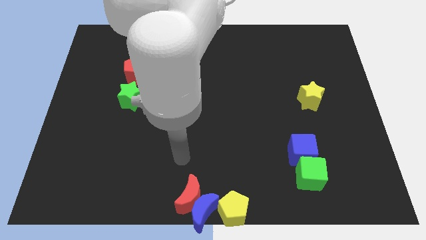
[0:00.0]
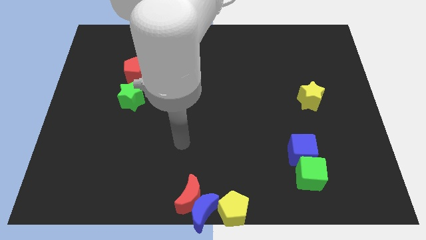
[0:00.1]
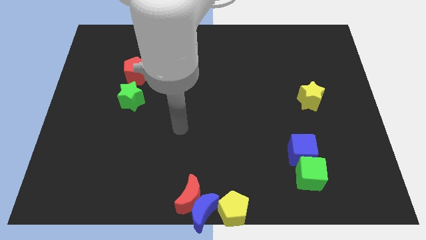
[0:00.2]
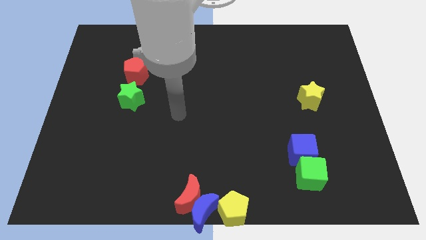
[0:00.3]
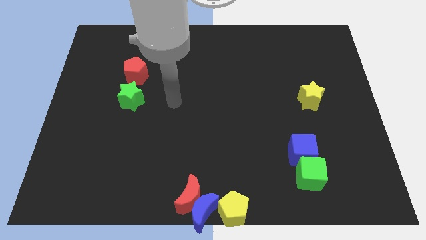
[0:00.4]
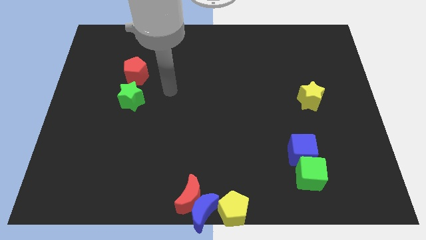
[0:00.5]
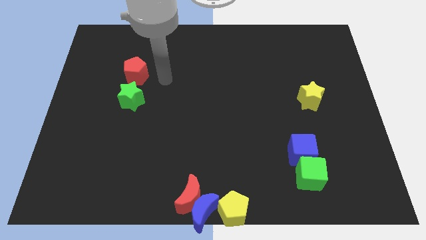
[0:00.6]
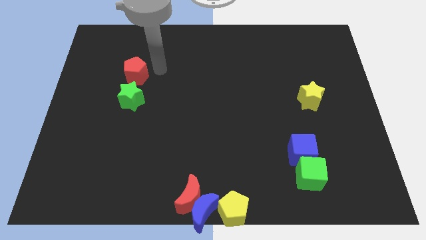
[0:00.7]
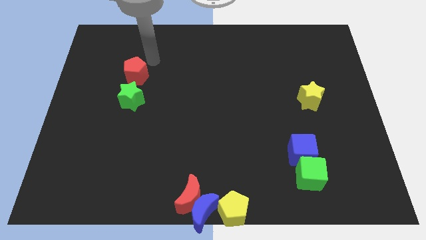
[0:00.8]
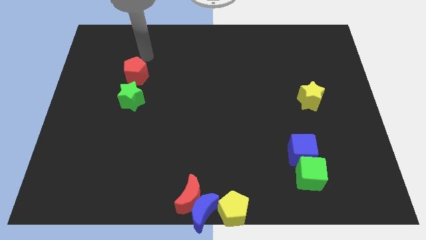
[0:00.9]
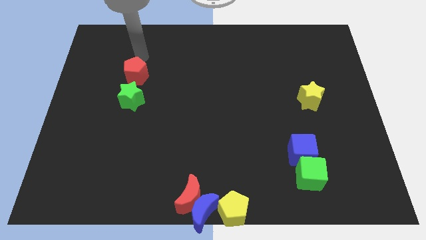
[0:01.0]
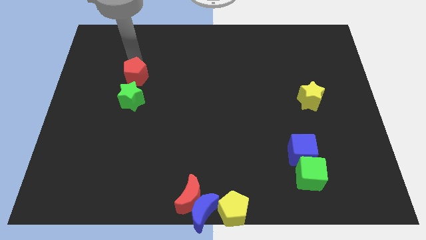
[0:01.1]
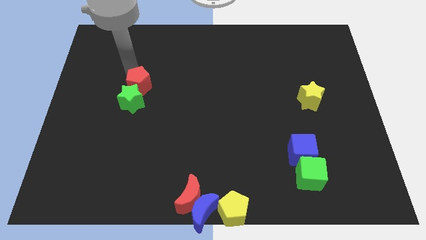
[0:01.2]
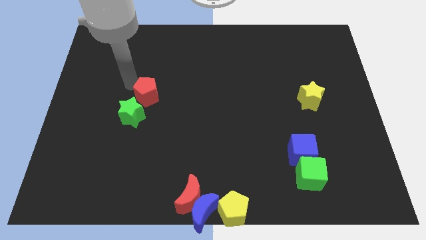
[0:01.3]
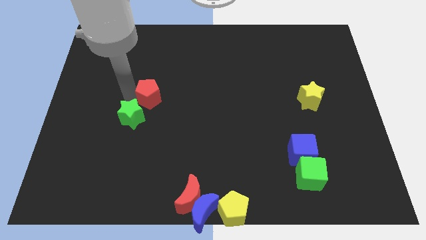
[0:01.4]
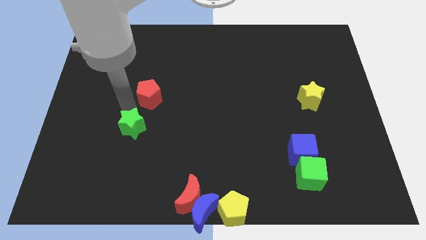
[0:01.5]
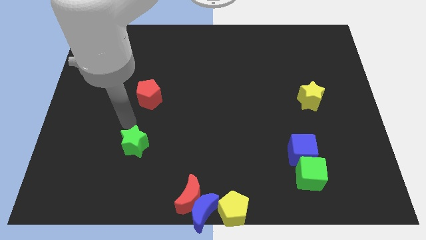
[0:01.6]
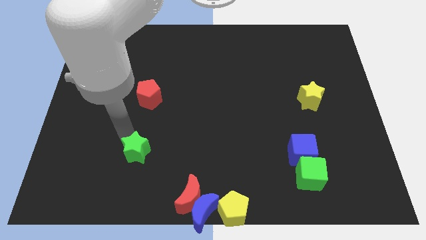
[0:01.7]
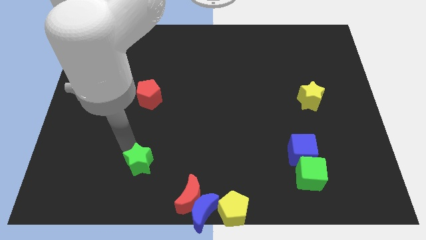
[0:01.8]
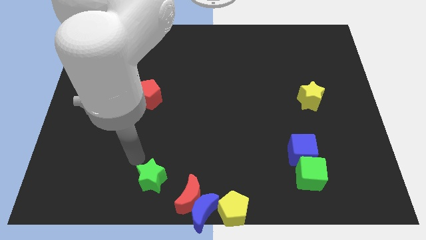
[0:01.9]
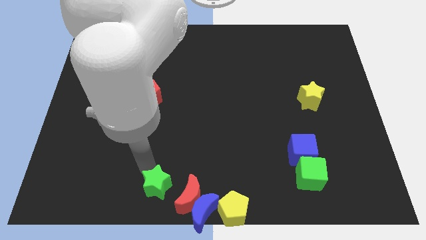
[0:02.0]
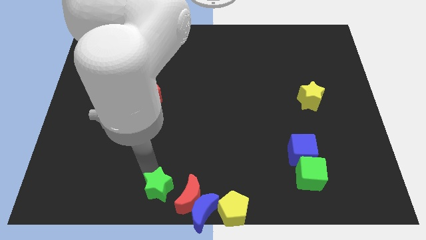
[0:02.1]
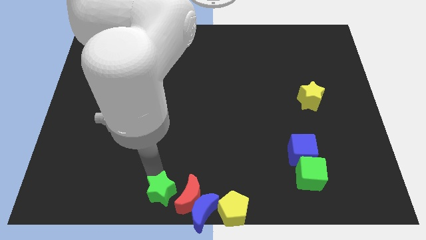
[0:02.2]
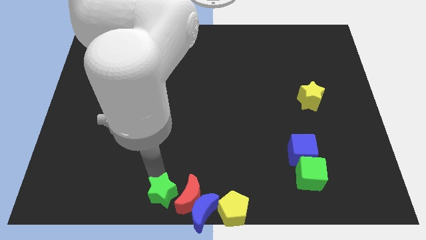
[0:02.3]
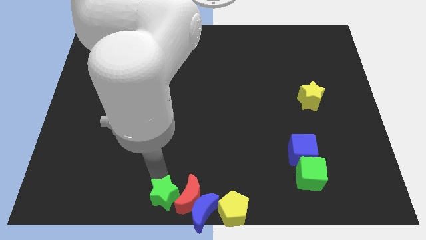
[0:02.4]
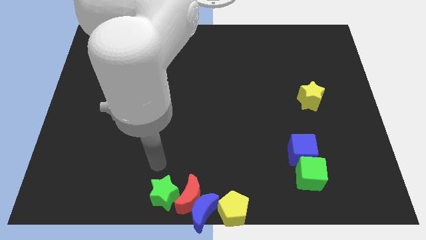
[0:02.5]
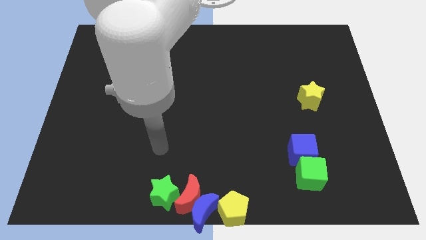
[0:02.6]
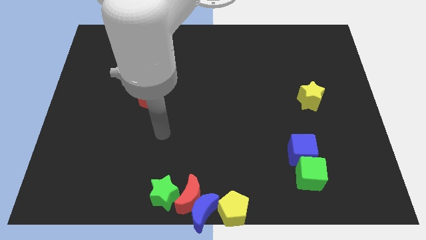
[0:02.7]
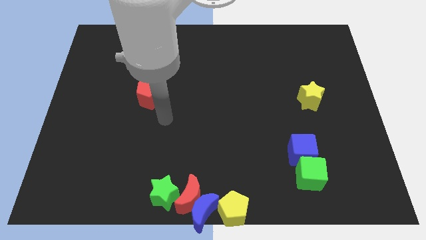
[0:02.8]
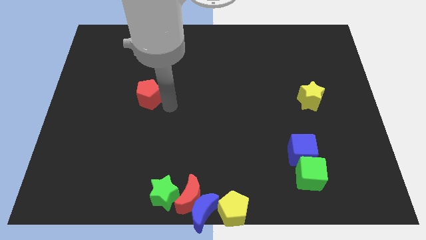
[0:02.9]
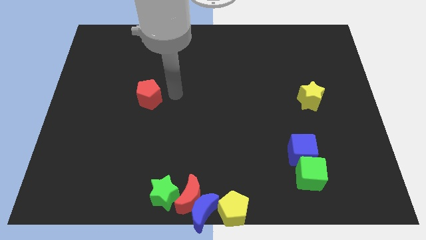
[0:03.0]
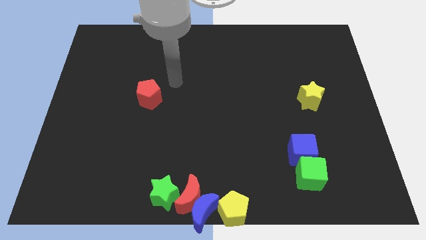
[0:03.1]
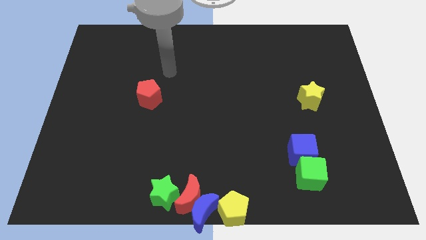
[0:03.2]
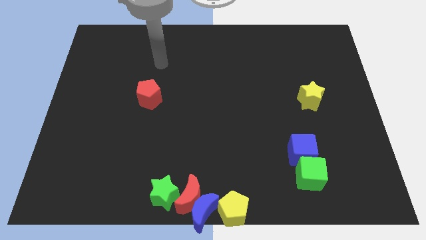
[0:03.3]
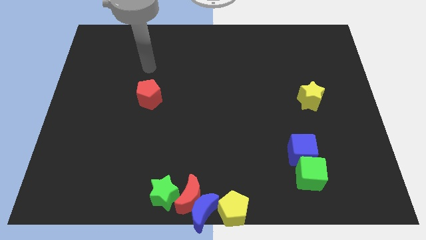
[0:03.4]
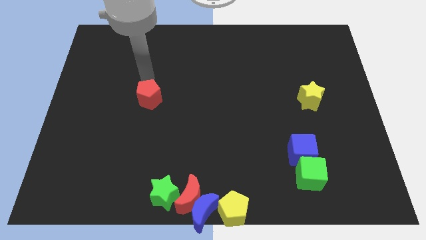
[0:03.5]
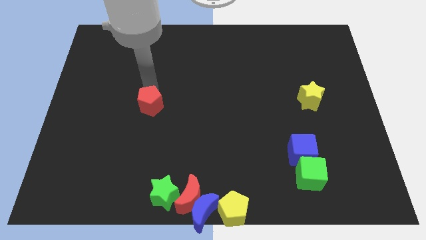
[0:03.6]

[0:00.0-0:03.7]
separate the red pentagon and the green star

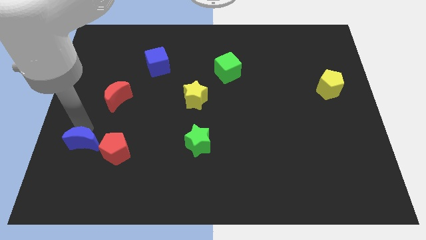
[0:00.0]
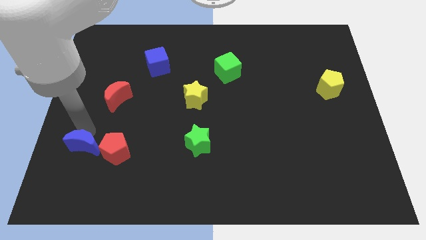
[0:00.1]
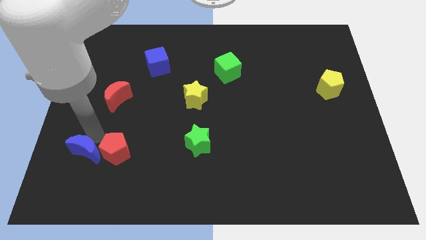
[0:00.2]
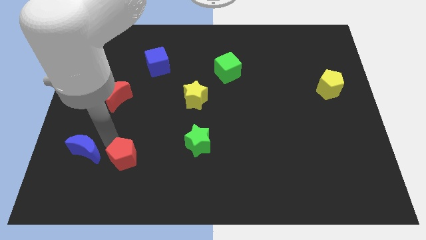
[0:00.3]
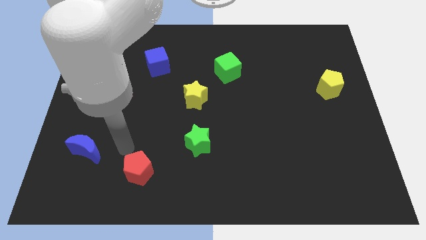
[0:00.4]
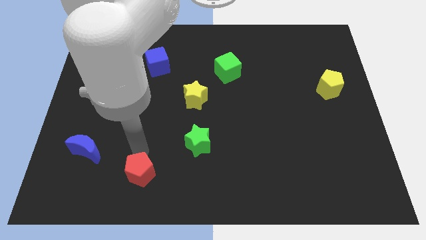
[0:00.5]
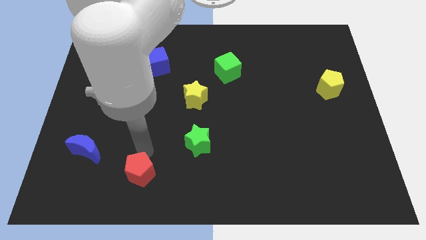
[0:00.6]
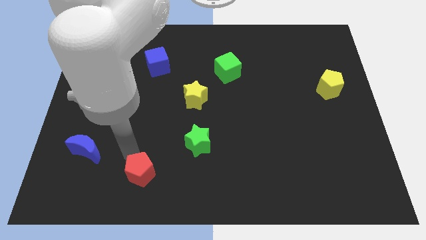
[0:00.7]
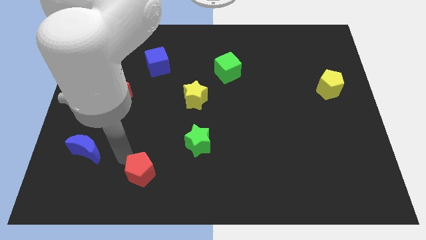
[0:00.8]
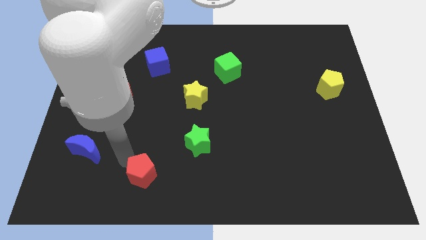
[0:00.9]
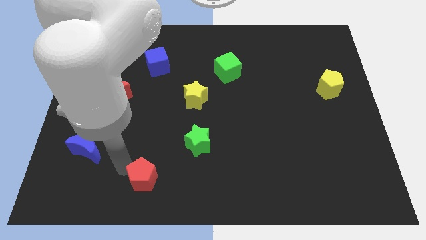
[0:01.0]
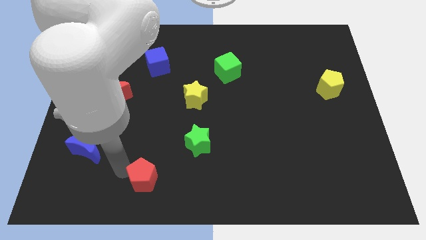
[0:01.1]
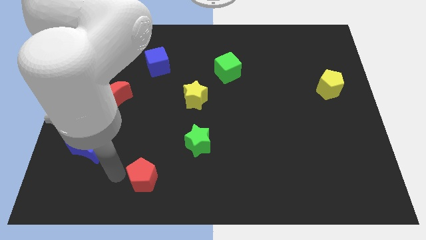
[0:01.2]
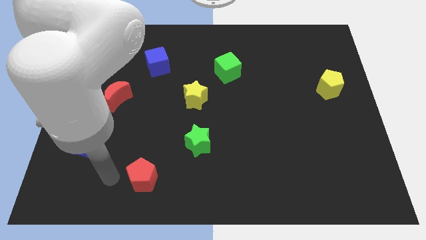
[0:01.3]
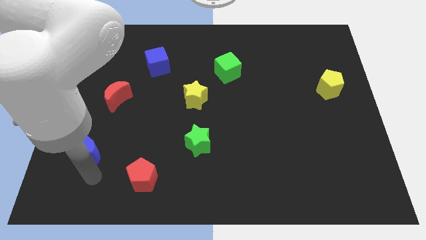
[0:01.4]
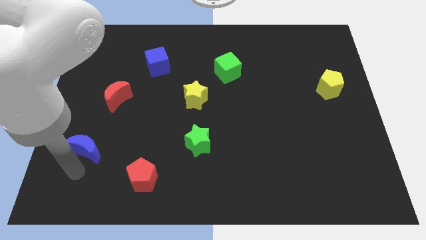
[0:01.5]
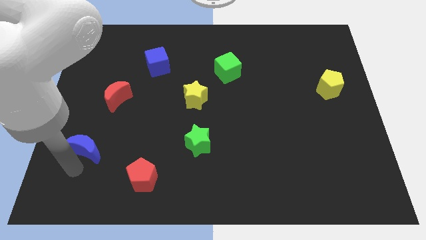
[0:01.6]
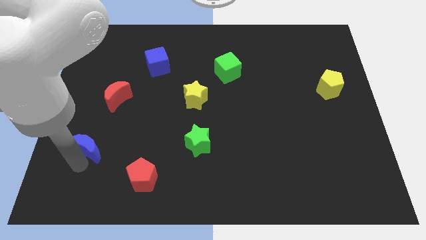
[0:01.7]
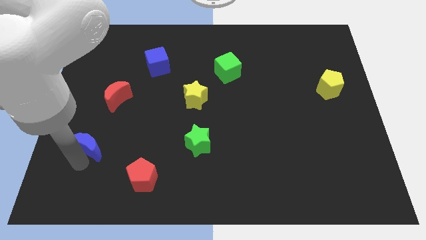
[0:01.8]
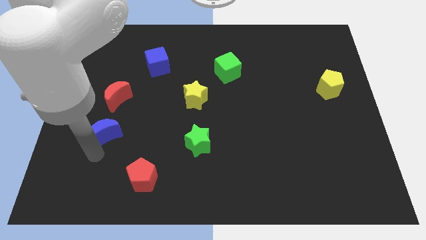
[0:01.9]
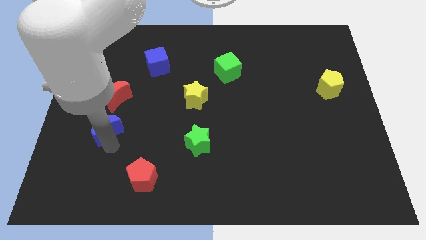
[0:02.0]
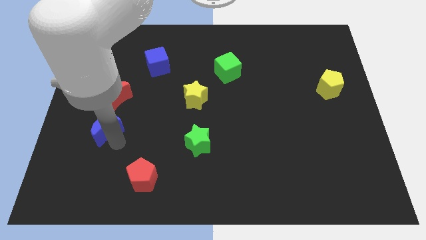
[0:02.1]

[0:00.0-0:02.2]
separate the blue crescent and red pentagon

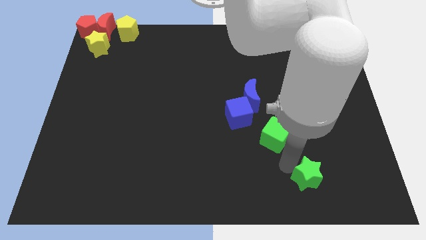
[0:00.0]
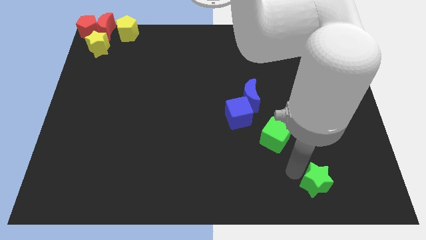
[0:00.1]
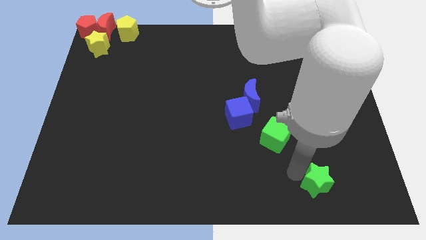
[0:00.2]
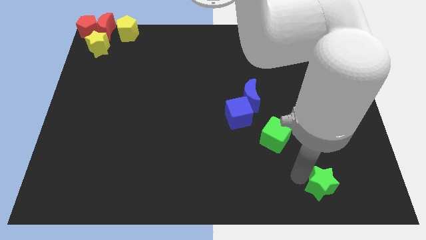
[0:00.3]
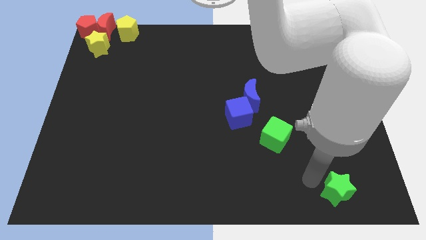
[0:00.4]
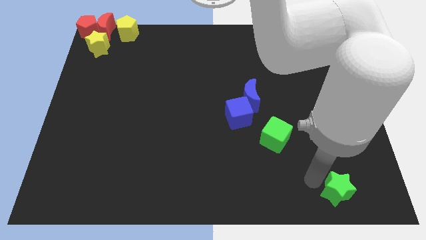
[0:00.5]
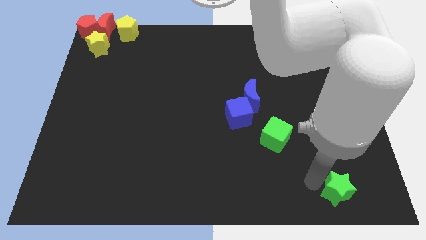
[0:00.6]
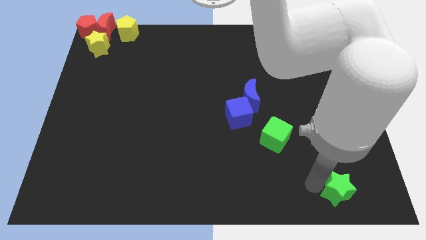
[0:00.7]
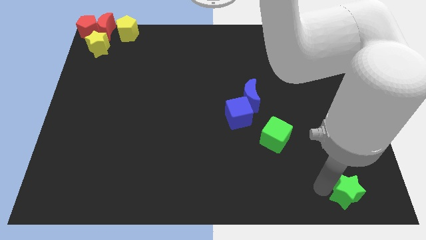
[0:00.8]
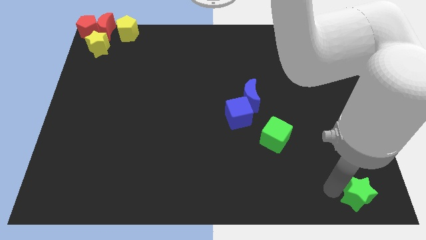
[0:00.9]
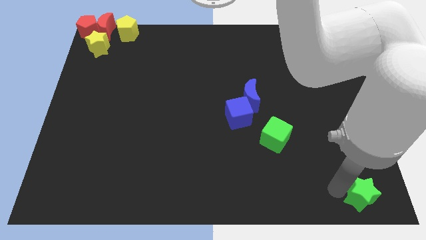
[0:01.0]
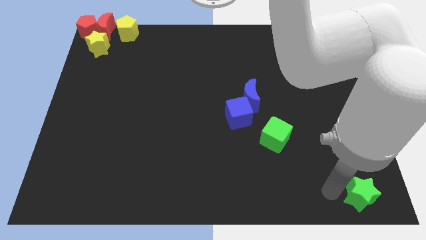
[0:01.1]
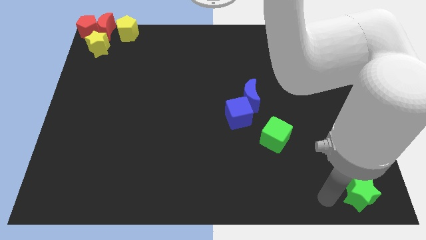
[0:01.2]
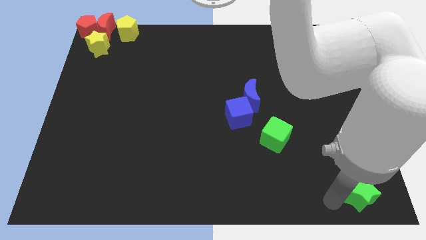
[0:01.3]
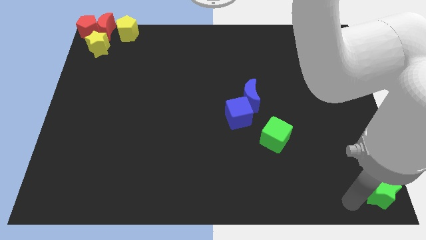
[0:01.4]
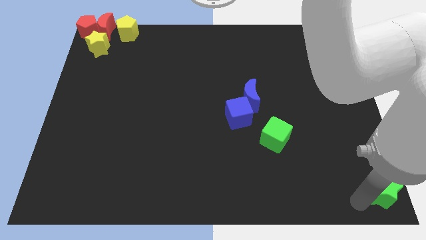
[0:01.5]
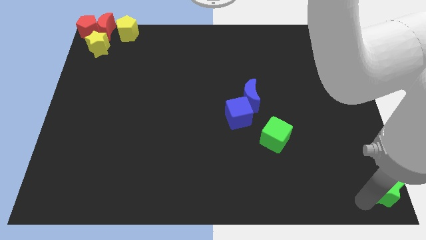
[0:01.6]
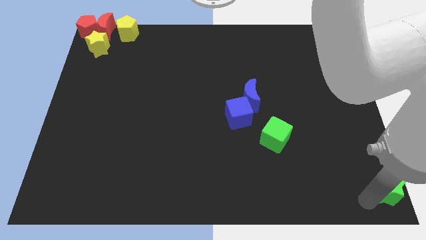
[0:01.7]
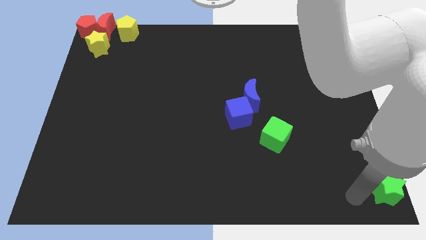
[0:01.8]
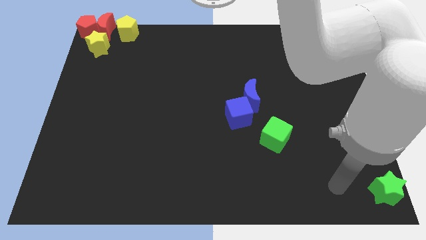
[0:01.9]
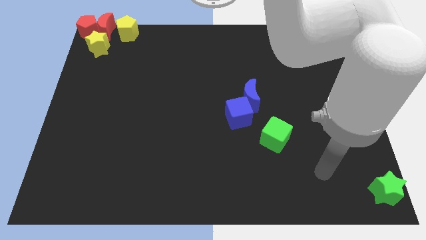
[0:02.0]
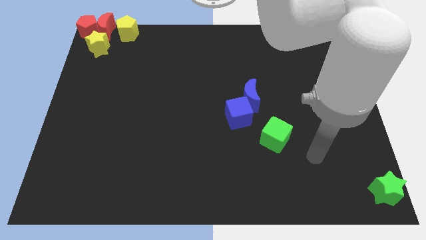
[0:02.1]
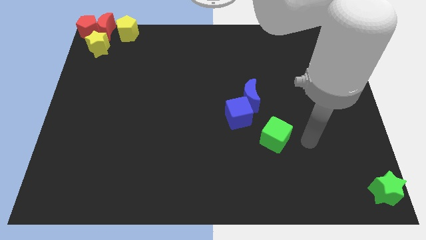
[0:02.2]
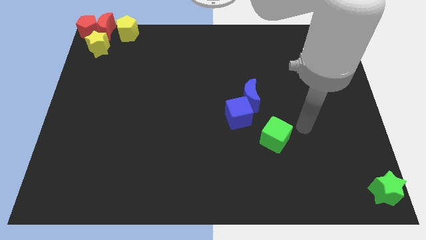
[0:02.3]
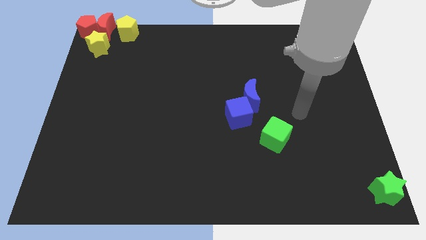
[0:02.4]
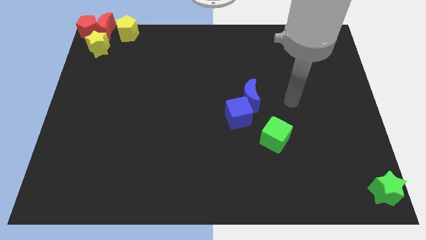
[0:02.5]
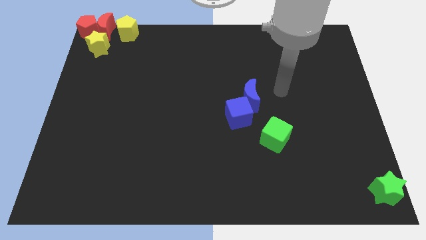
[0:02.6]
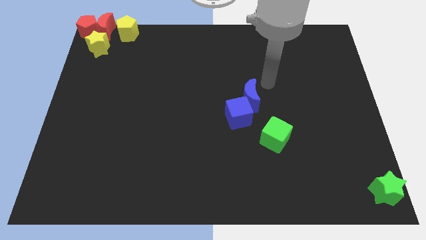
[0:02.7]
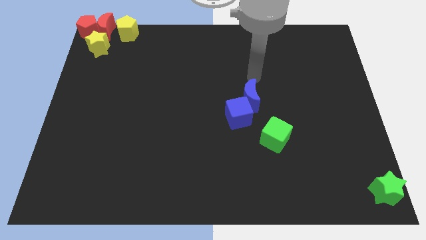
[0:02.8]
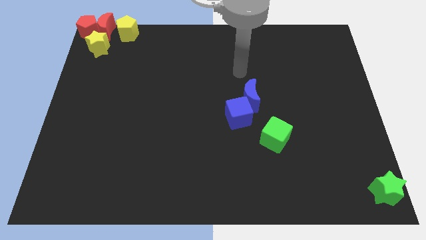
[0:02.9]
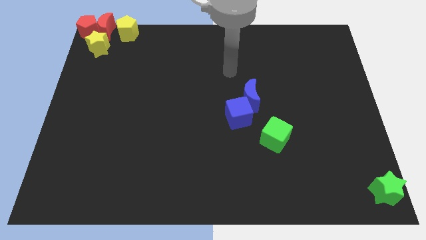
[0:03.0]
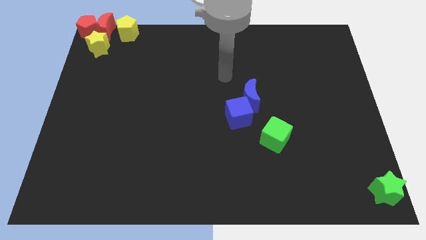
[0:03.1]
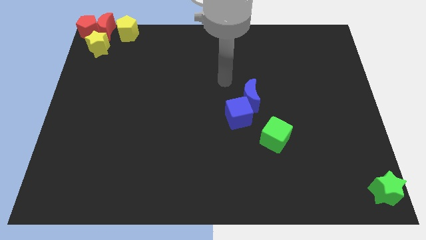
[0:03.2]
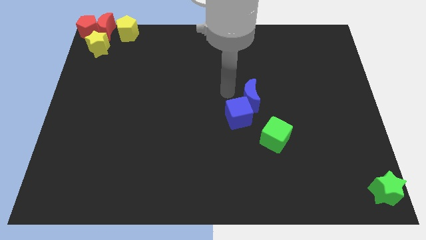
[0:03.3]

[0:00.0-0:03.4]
put the green star at the bottom right corner of the board
